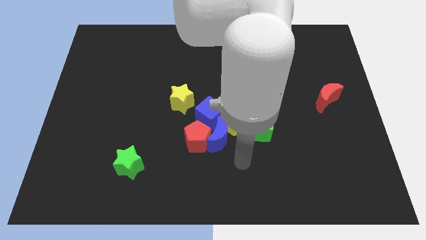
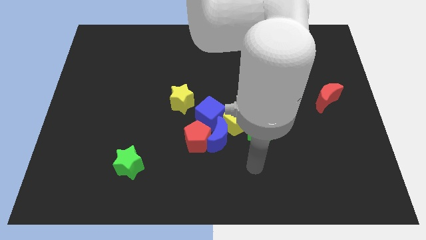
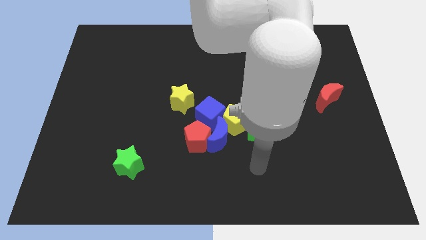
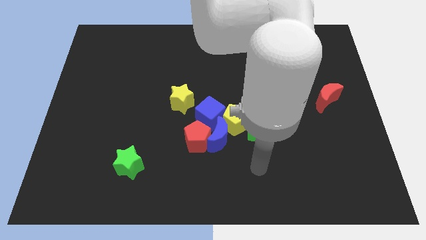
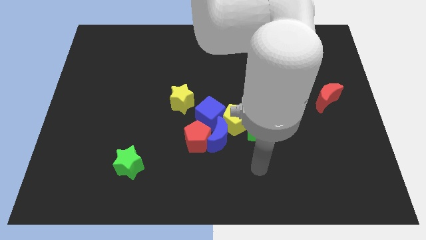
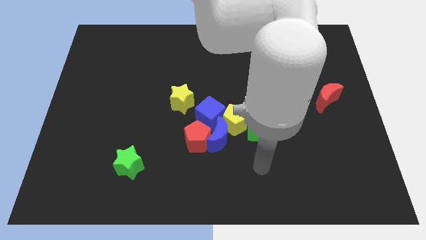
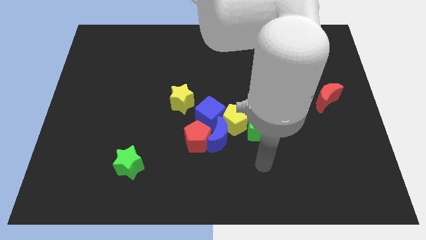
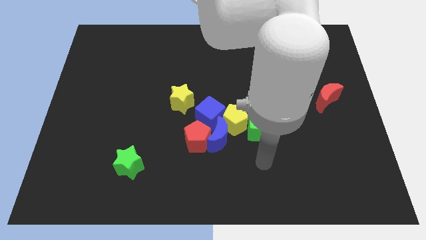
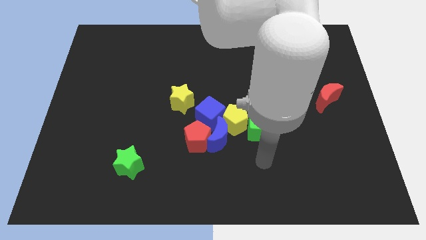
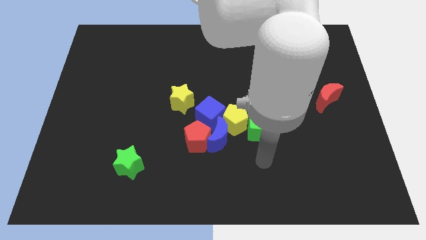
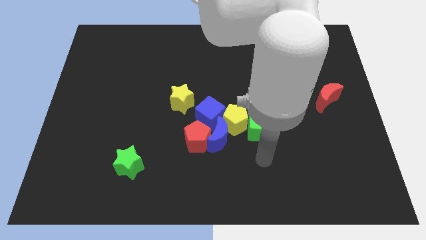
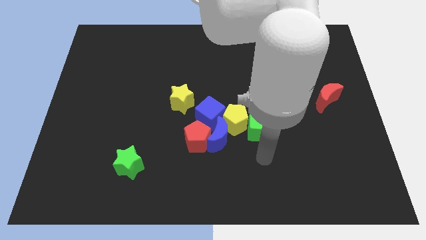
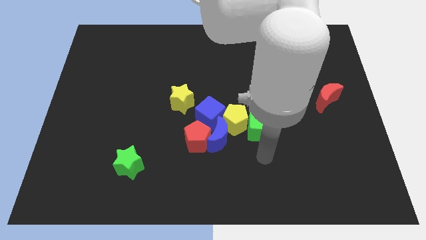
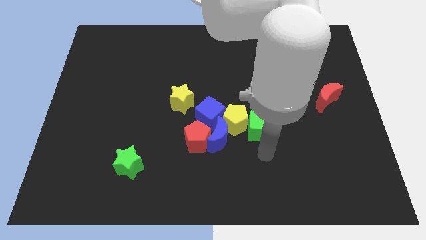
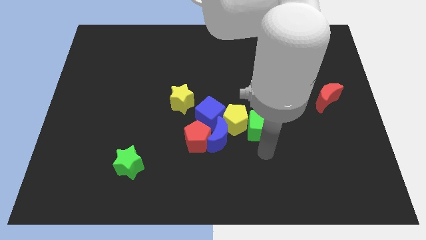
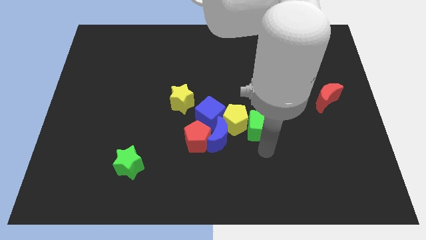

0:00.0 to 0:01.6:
move your arm to the bottom of the green cube

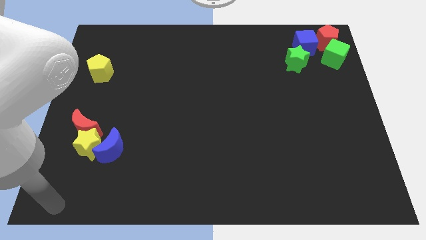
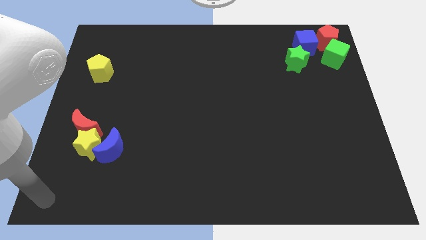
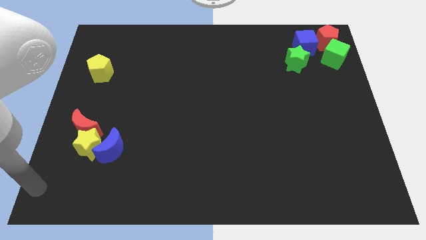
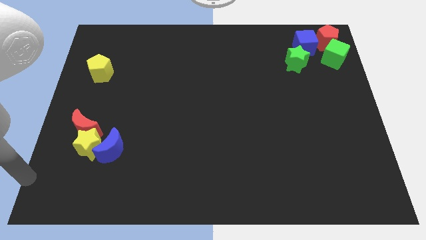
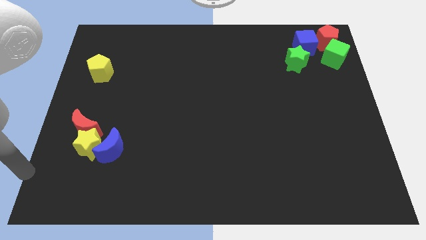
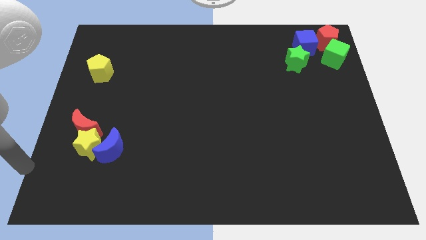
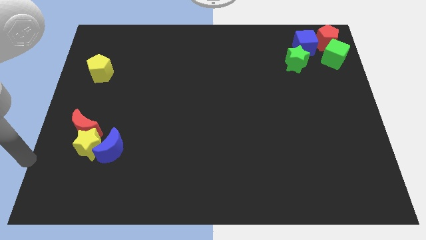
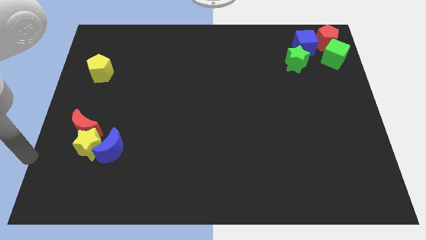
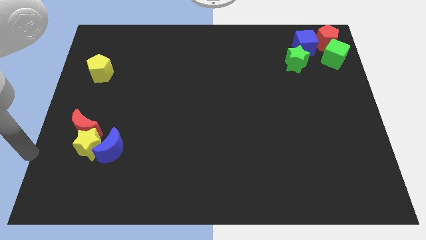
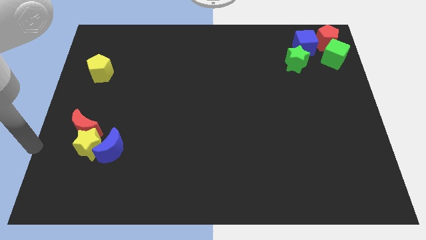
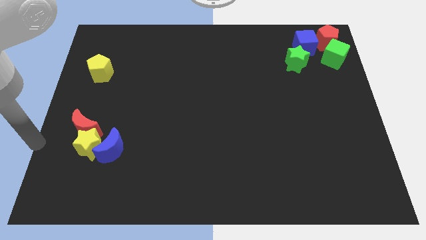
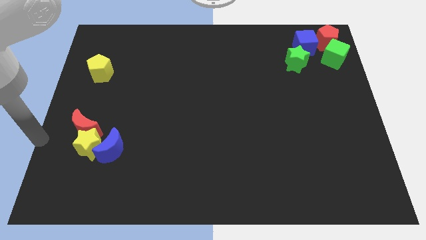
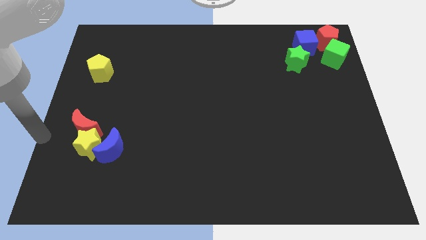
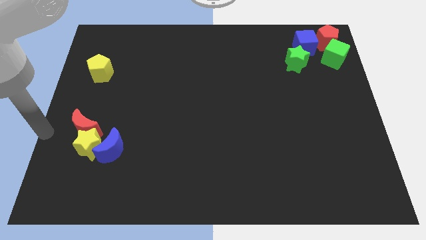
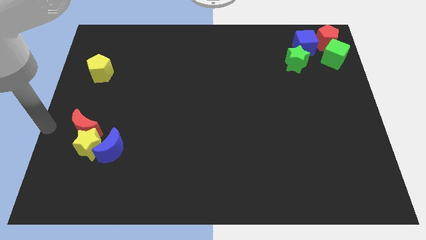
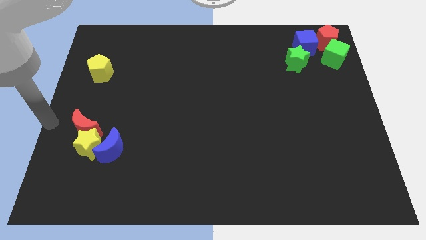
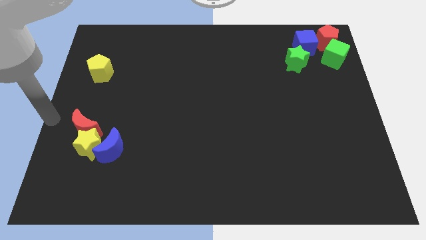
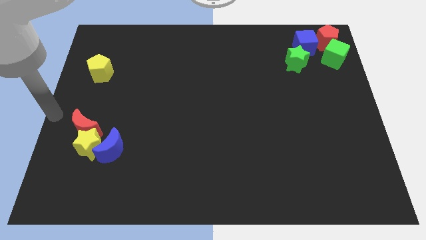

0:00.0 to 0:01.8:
place your arm to the left of the red moon

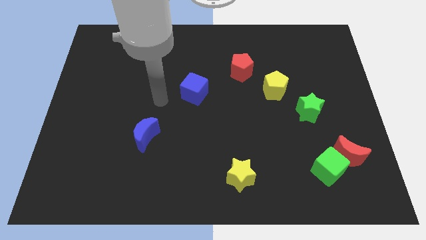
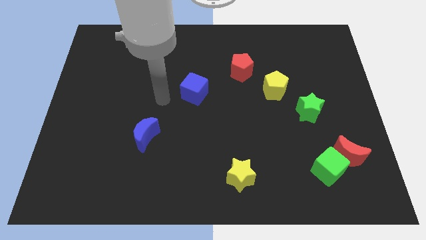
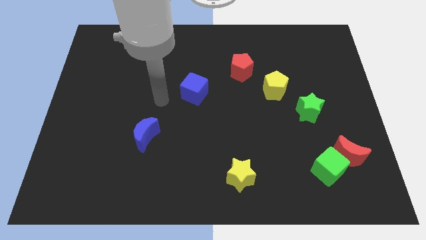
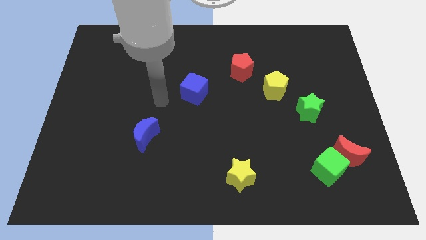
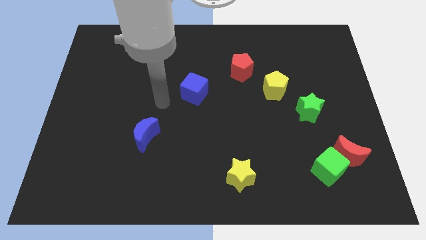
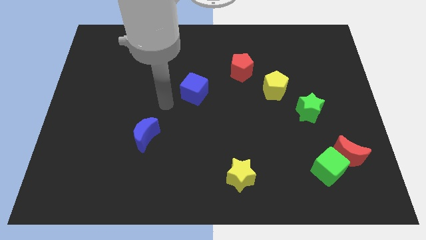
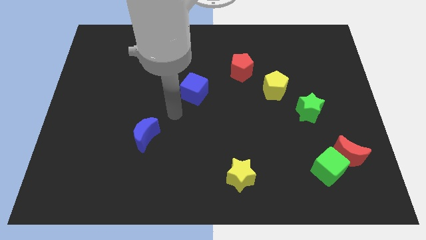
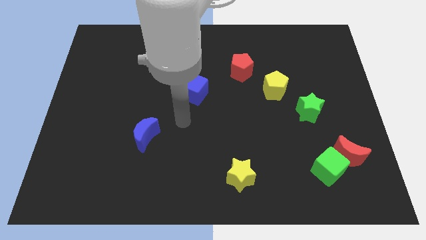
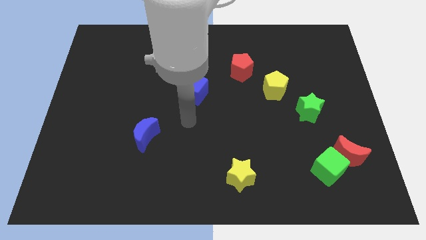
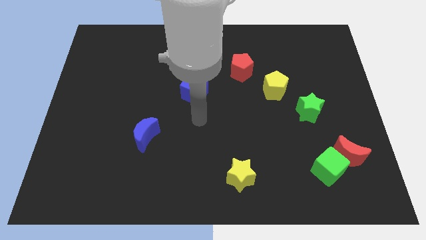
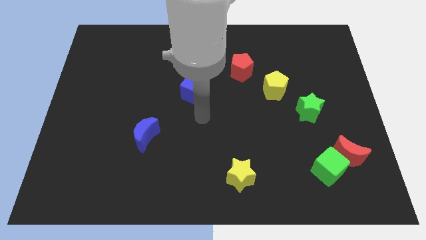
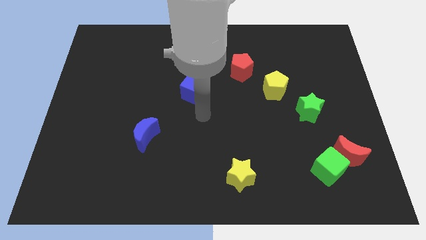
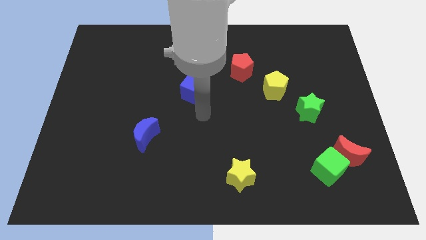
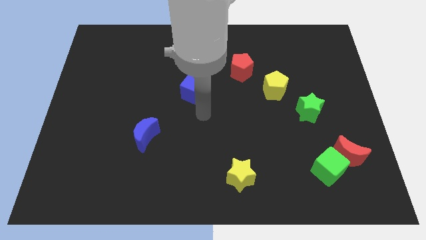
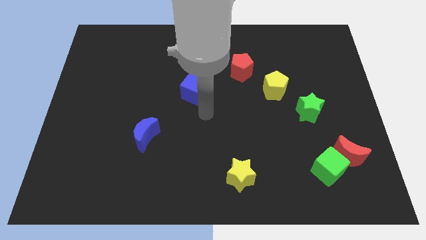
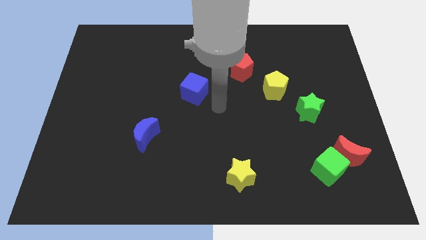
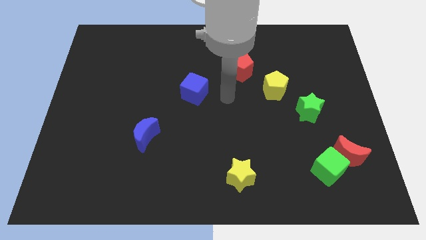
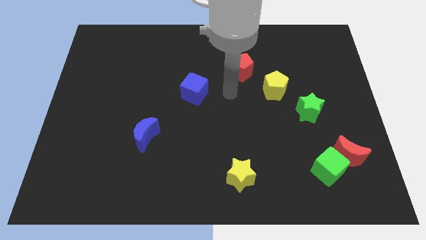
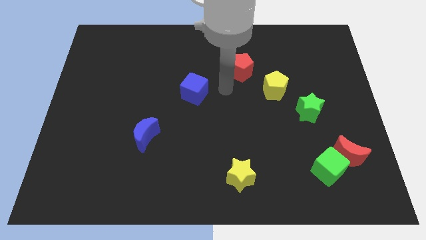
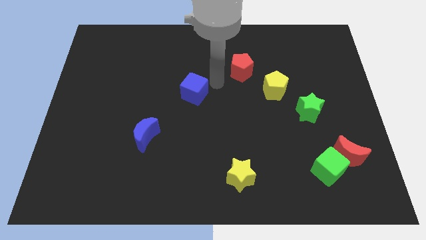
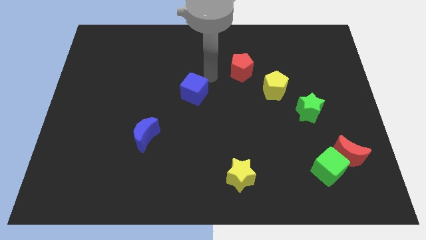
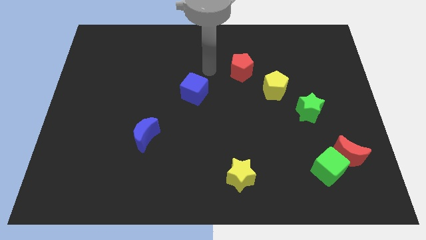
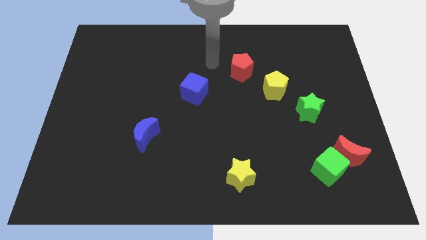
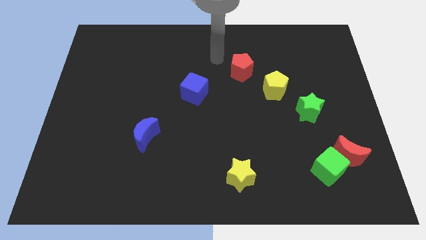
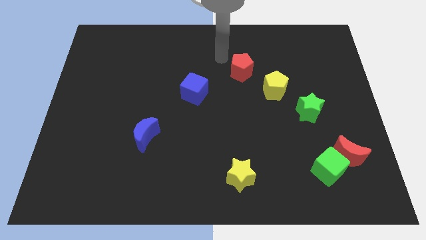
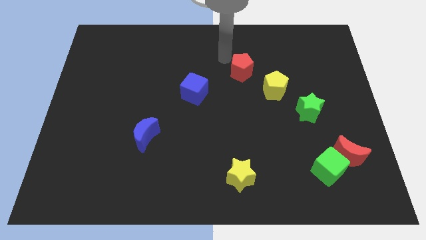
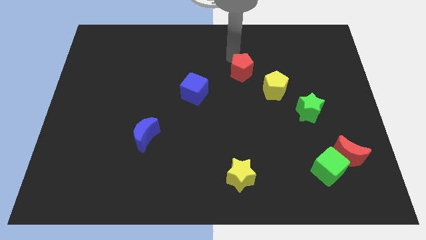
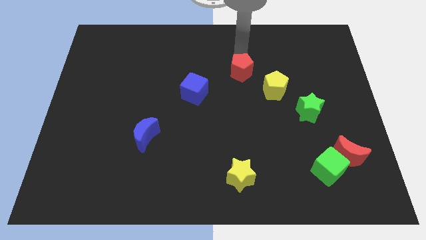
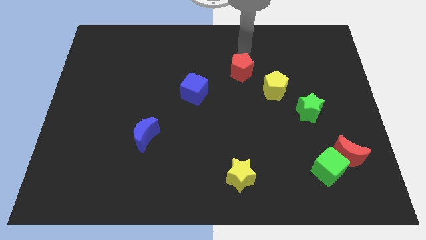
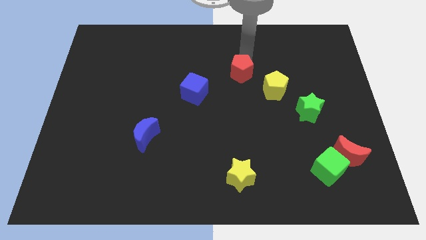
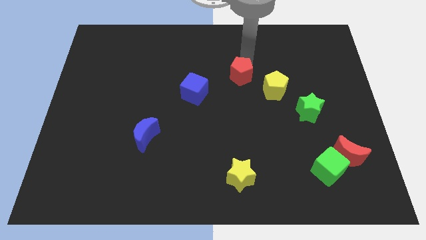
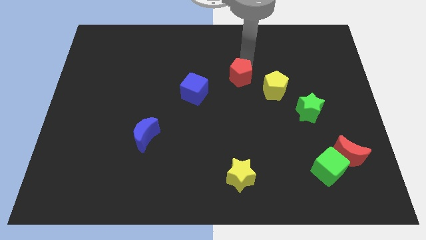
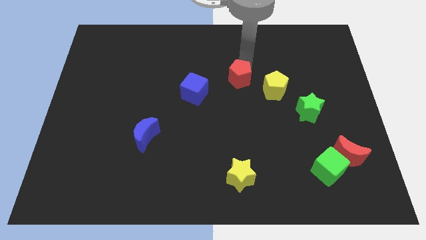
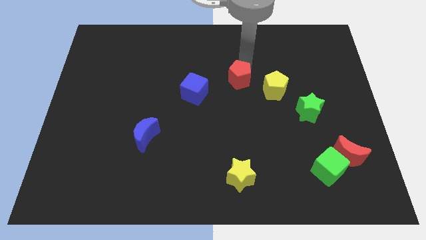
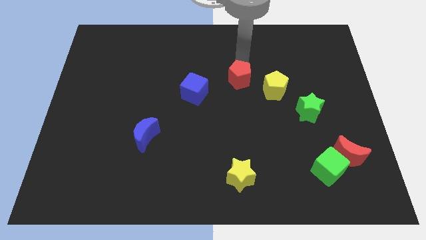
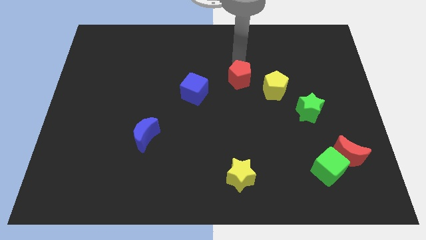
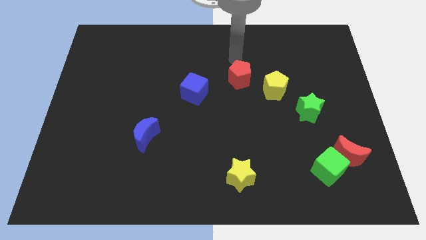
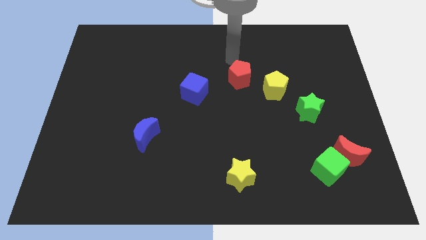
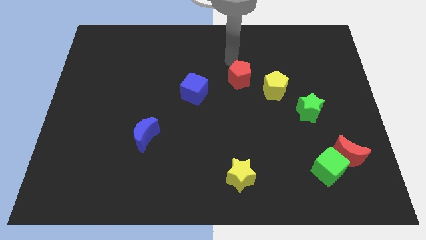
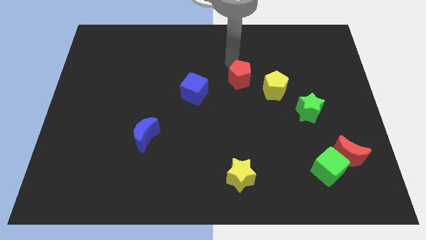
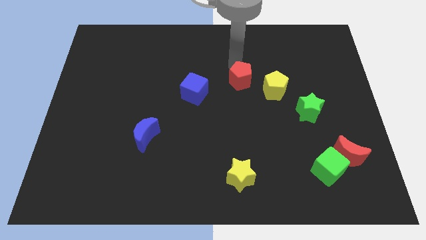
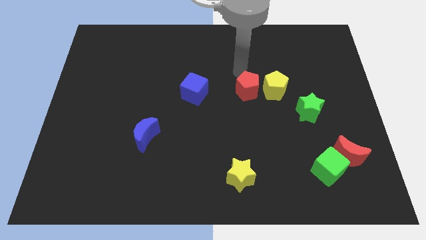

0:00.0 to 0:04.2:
move the red pentagon to the left side of the yellow pentagon

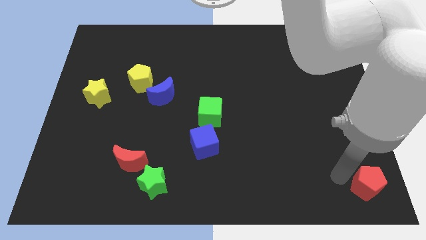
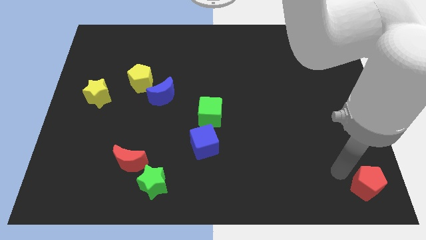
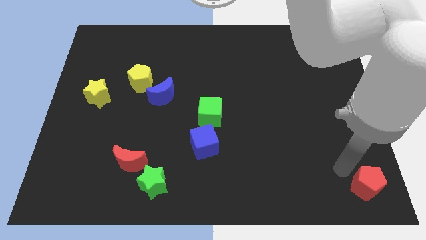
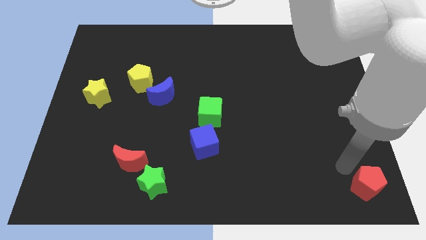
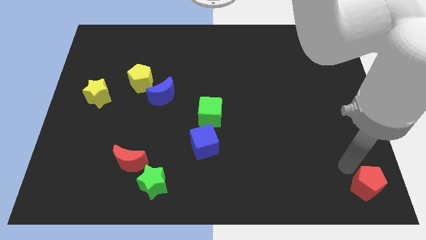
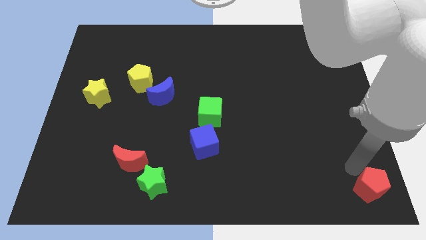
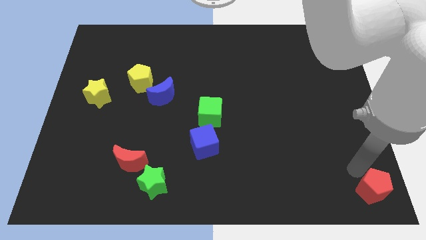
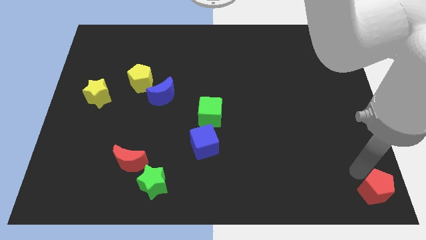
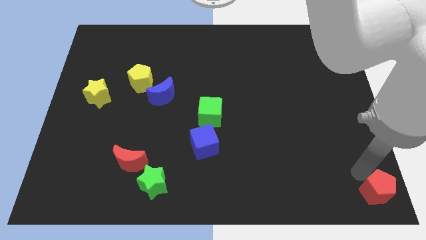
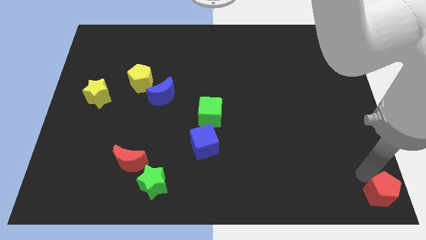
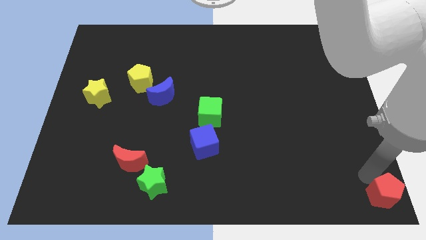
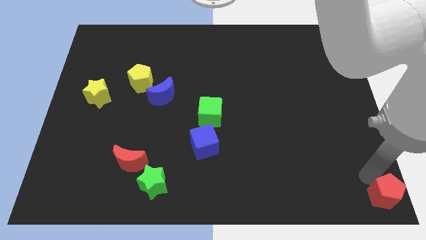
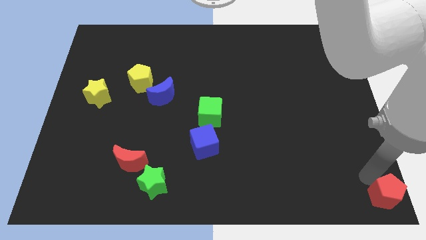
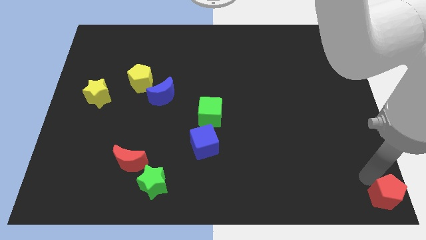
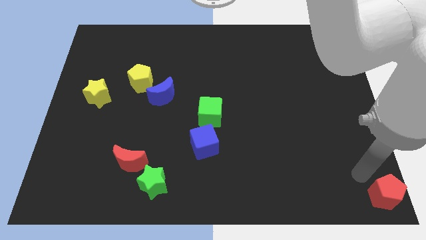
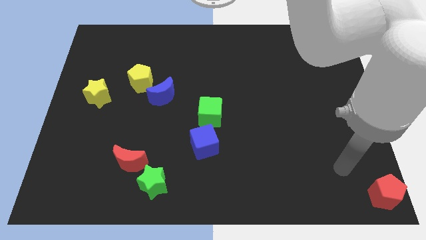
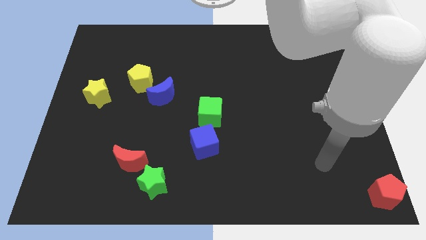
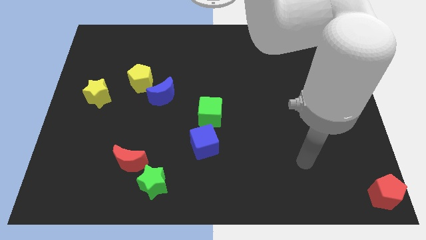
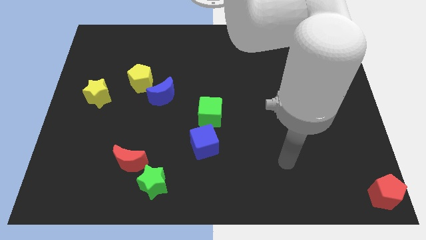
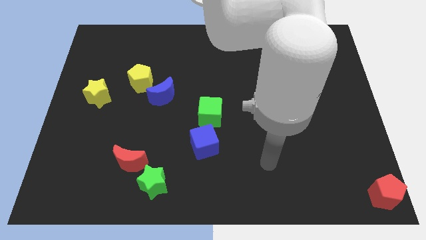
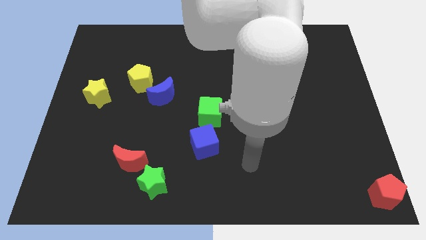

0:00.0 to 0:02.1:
place the red pentagon at the bottom right corner of the board
